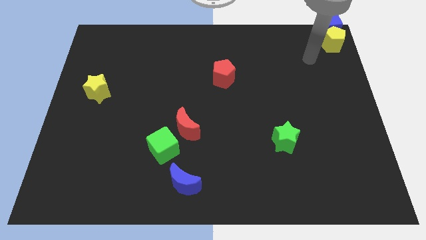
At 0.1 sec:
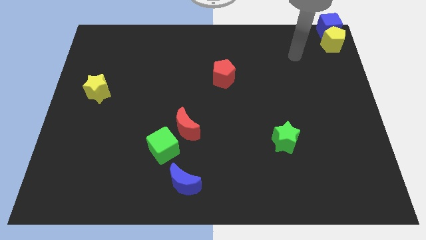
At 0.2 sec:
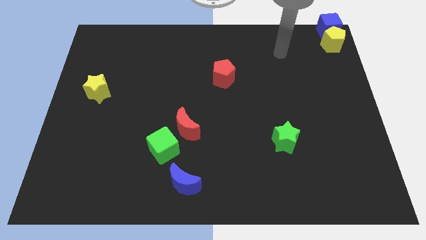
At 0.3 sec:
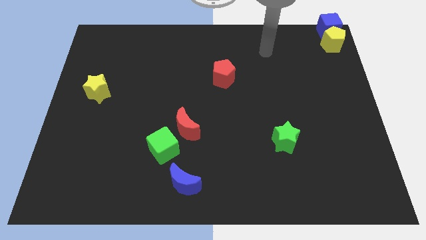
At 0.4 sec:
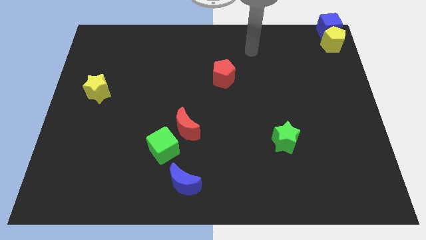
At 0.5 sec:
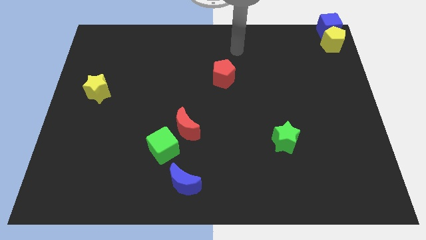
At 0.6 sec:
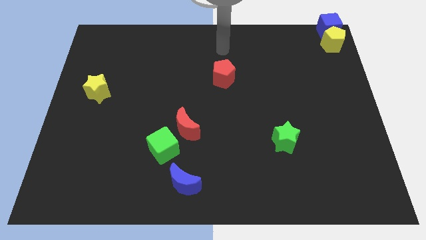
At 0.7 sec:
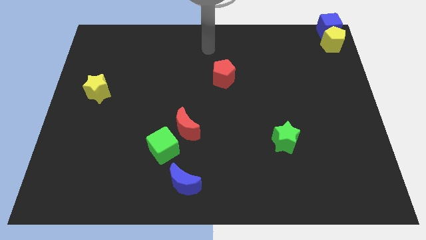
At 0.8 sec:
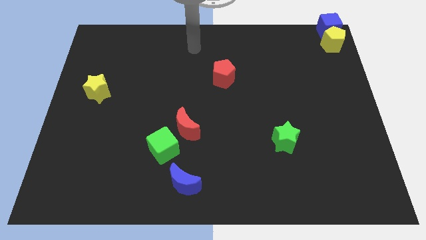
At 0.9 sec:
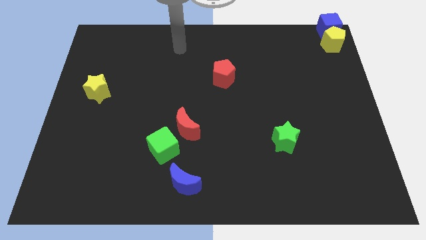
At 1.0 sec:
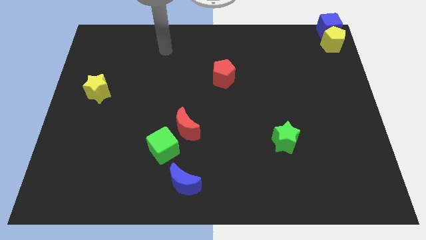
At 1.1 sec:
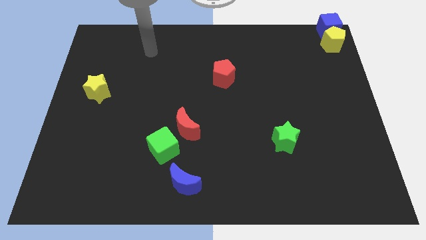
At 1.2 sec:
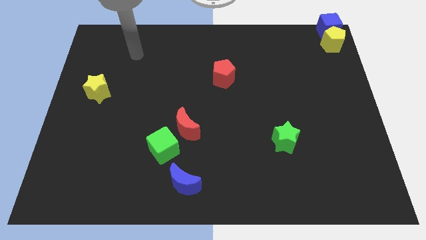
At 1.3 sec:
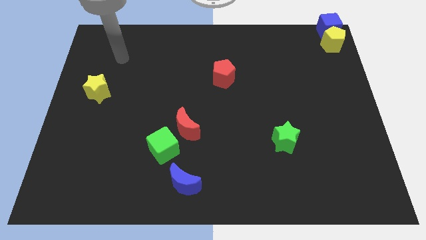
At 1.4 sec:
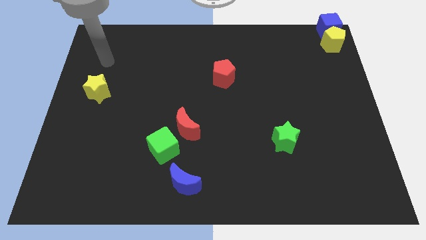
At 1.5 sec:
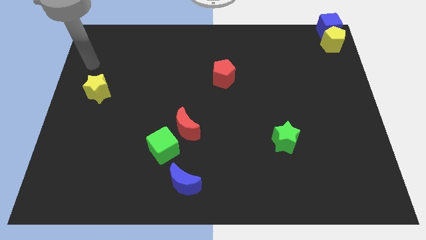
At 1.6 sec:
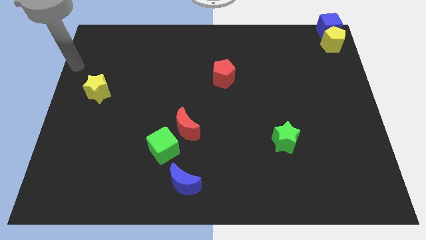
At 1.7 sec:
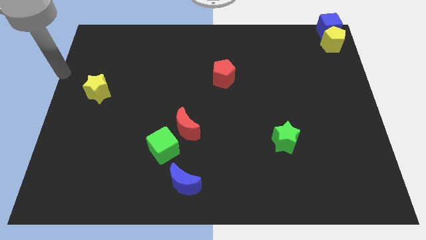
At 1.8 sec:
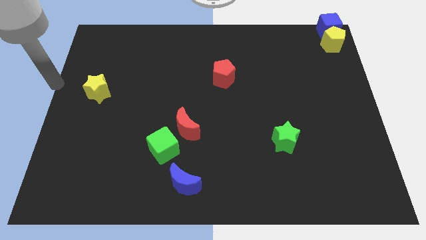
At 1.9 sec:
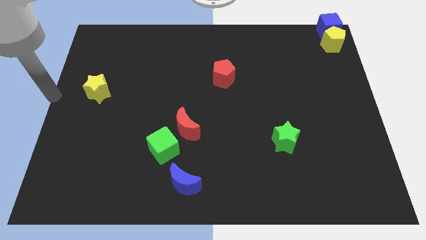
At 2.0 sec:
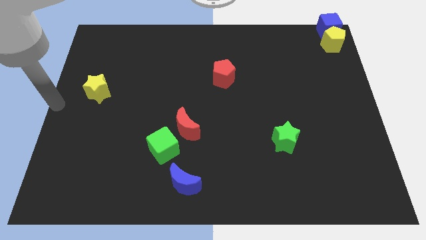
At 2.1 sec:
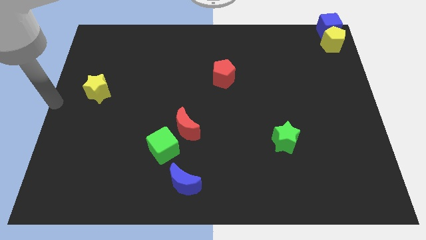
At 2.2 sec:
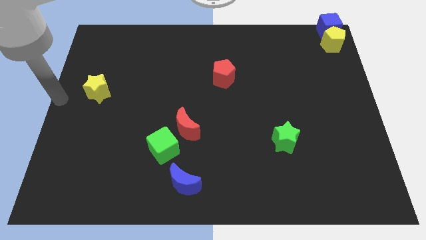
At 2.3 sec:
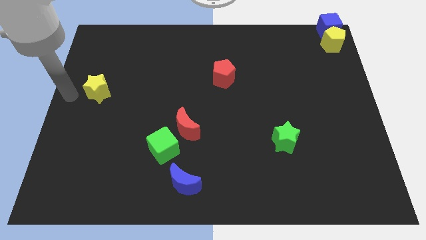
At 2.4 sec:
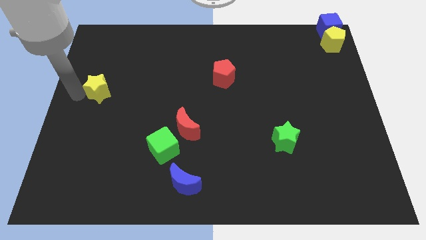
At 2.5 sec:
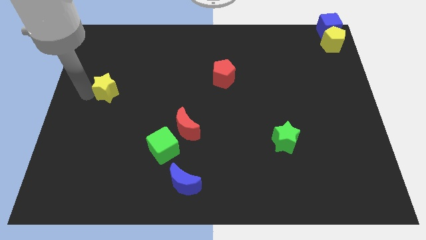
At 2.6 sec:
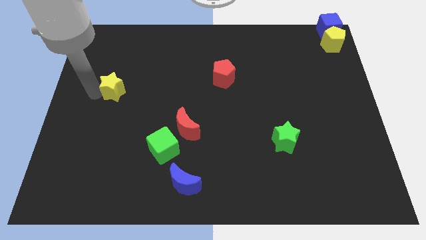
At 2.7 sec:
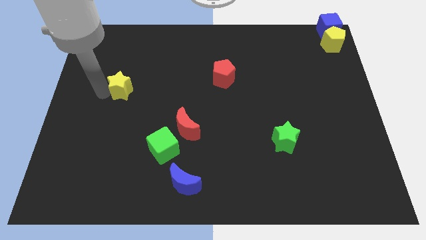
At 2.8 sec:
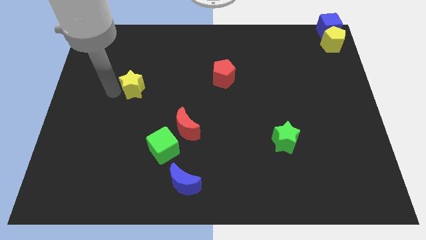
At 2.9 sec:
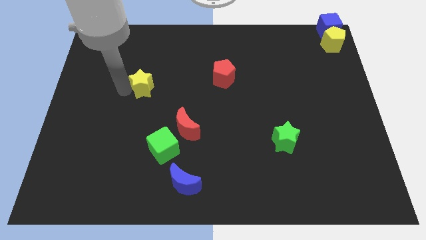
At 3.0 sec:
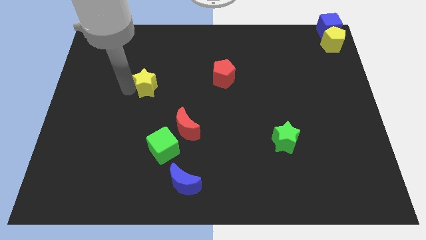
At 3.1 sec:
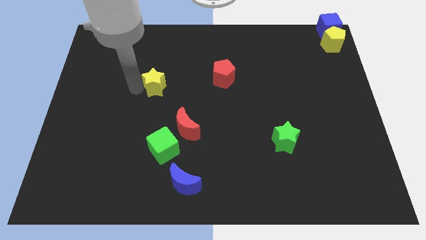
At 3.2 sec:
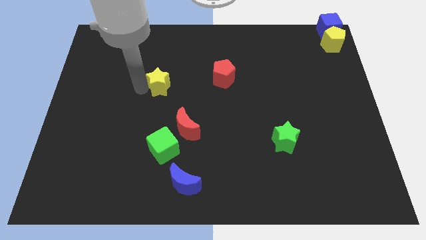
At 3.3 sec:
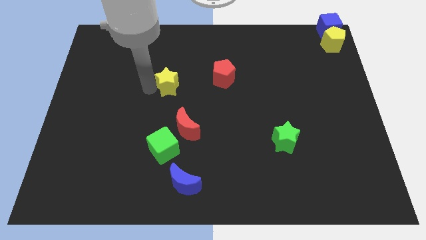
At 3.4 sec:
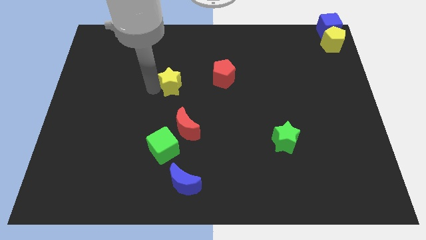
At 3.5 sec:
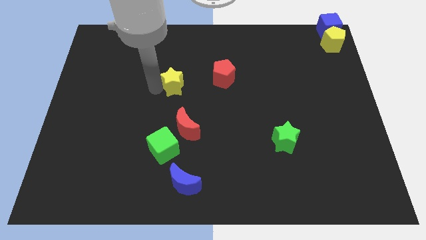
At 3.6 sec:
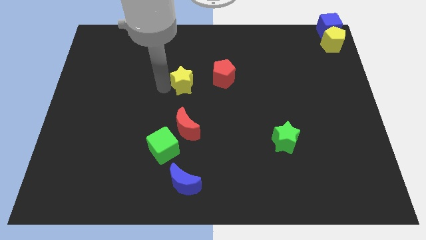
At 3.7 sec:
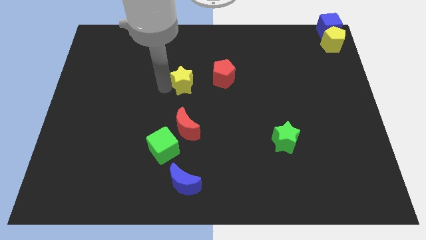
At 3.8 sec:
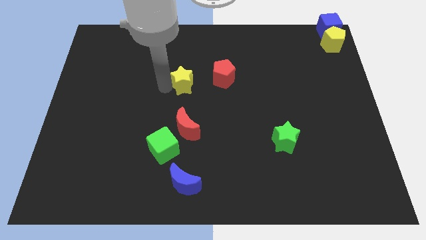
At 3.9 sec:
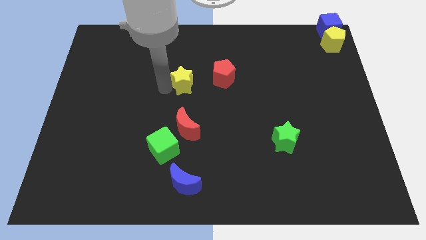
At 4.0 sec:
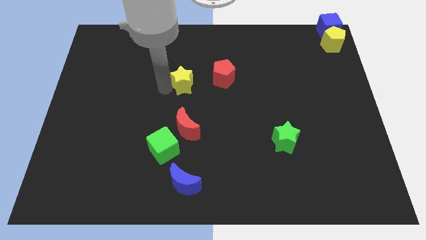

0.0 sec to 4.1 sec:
place the yellow star to the left of the red pentagon

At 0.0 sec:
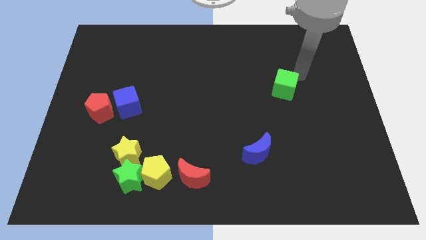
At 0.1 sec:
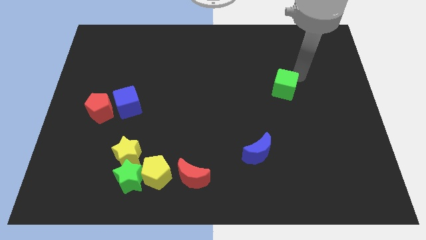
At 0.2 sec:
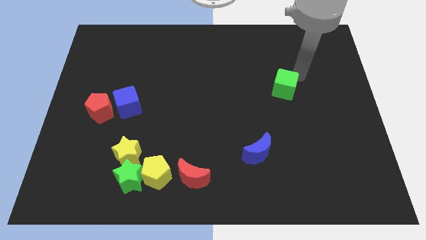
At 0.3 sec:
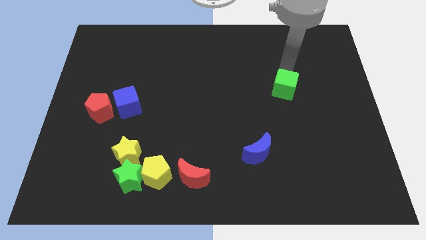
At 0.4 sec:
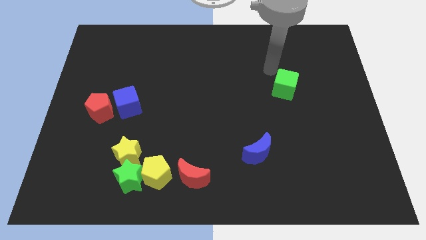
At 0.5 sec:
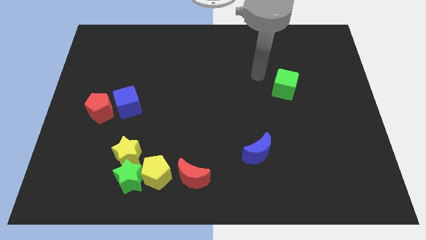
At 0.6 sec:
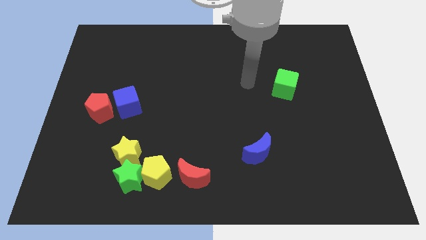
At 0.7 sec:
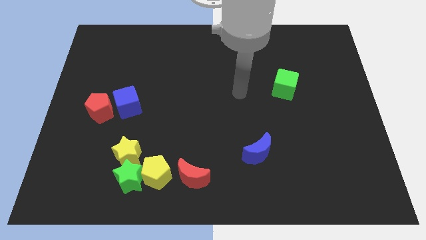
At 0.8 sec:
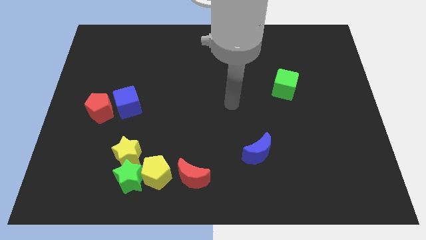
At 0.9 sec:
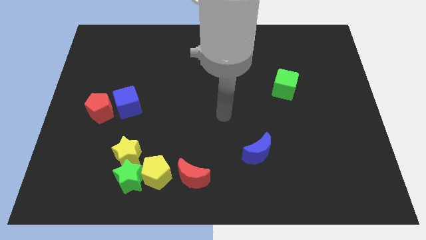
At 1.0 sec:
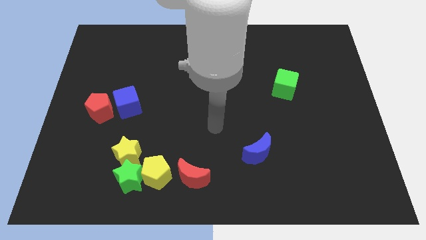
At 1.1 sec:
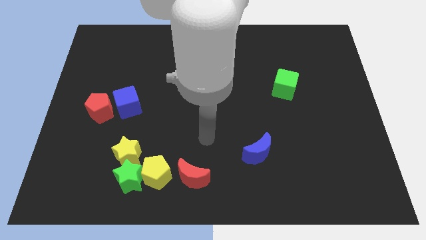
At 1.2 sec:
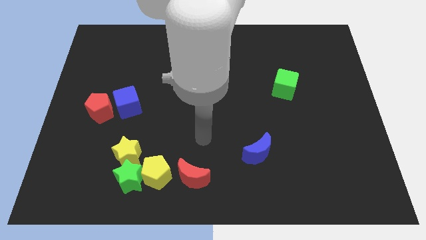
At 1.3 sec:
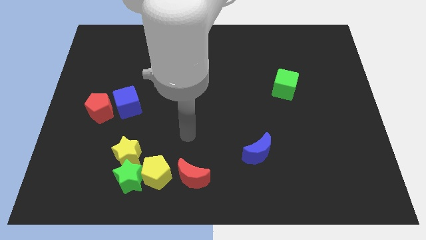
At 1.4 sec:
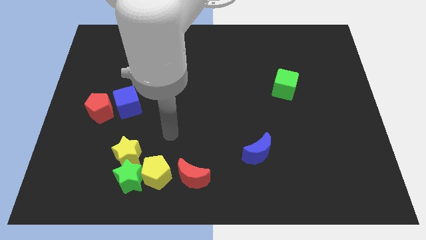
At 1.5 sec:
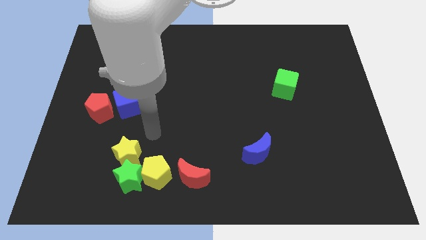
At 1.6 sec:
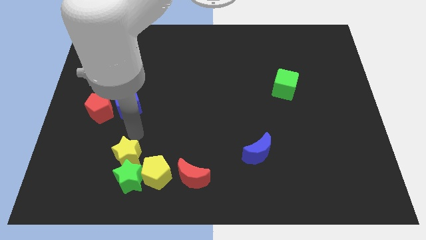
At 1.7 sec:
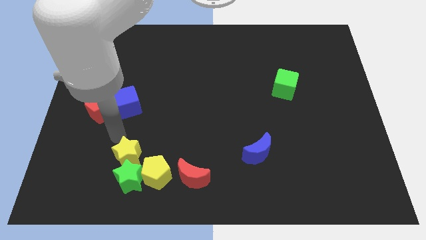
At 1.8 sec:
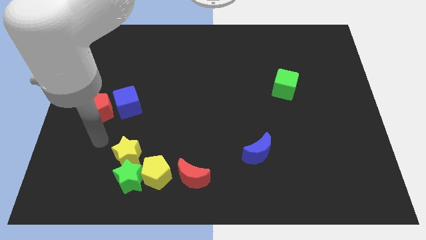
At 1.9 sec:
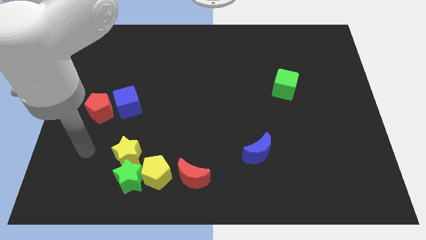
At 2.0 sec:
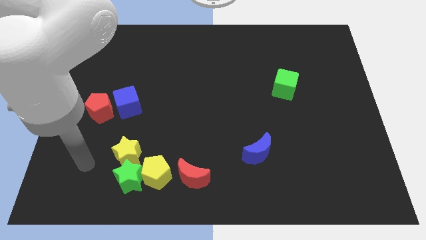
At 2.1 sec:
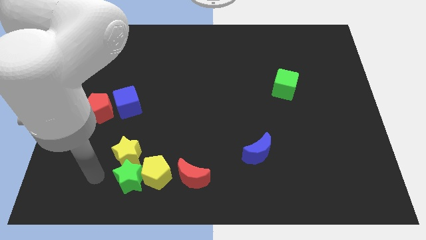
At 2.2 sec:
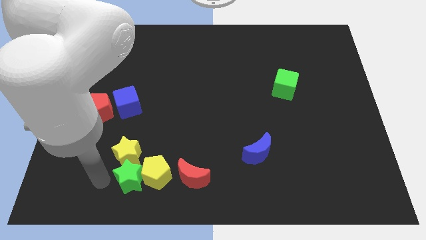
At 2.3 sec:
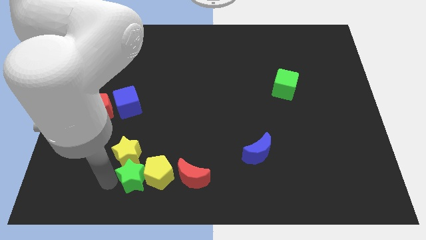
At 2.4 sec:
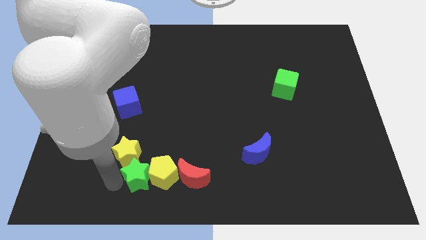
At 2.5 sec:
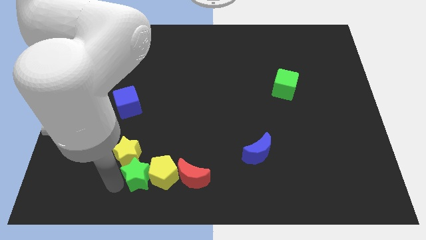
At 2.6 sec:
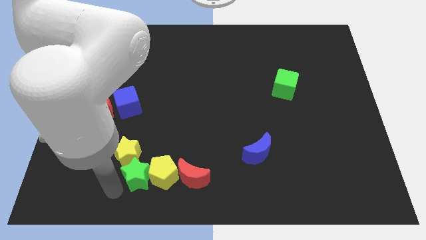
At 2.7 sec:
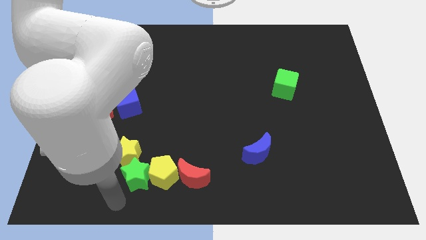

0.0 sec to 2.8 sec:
push the green star and yellow pentagon into the red moon

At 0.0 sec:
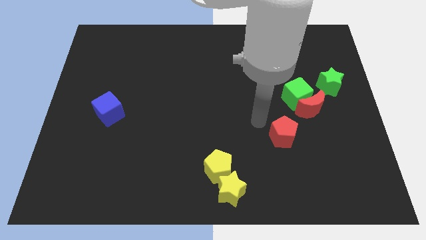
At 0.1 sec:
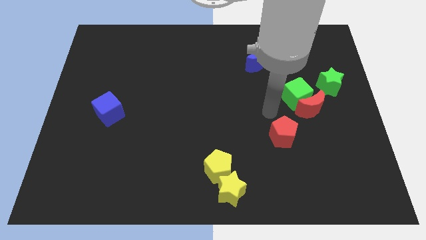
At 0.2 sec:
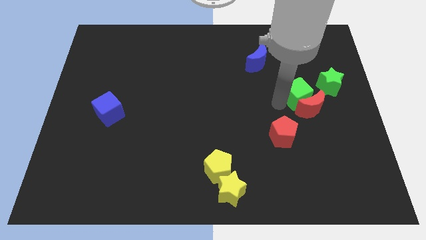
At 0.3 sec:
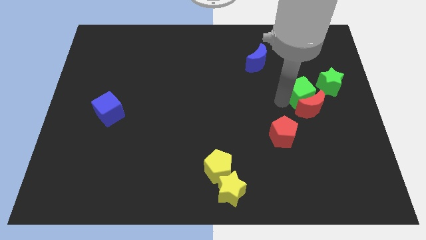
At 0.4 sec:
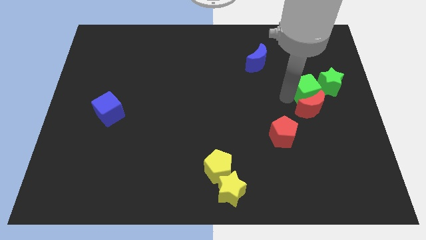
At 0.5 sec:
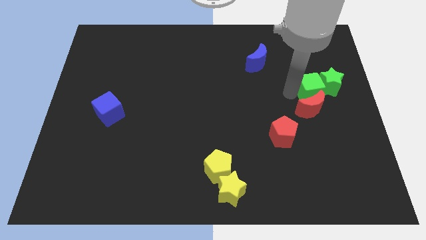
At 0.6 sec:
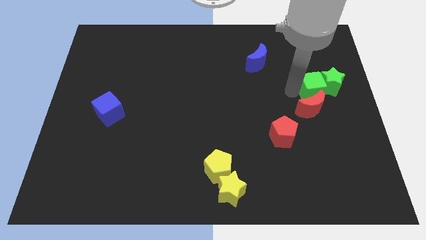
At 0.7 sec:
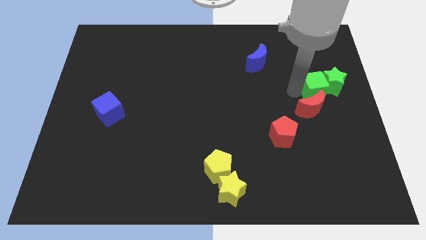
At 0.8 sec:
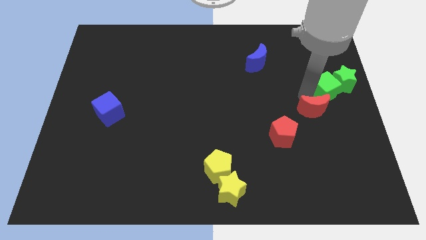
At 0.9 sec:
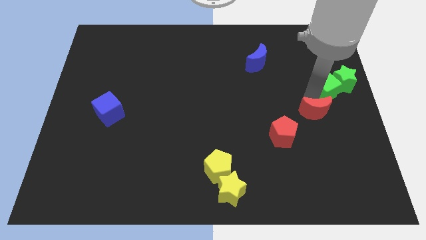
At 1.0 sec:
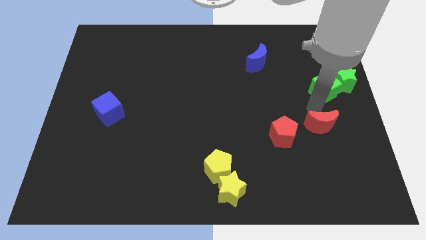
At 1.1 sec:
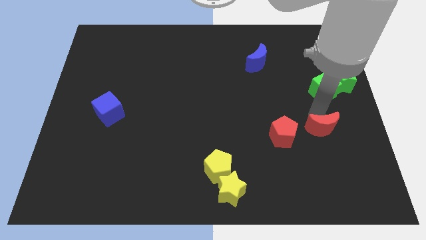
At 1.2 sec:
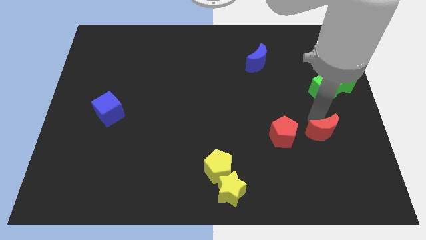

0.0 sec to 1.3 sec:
push the green cube into the green star

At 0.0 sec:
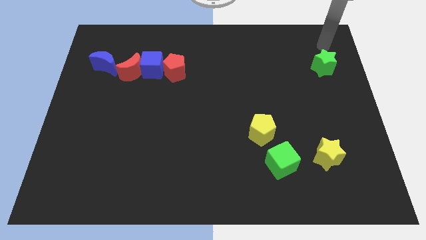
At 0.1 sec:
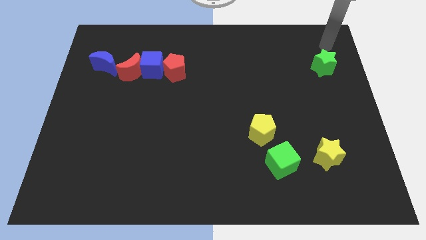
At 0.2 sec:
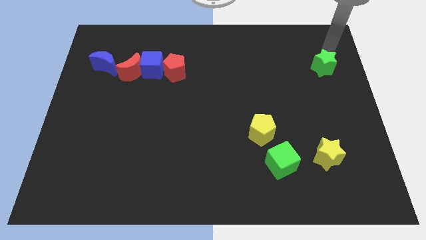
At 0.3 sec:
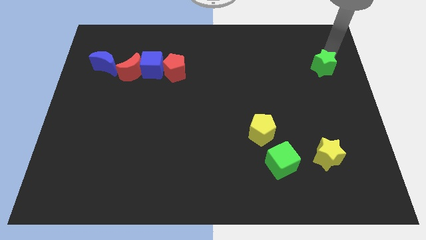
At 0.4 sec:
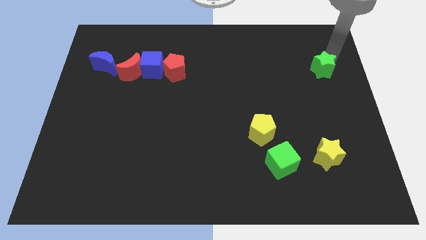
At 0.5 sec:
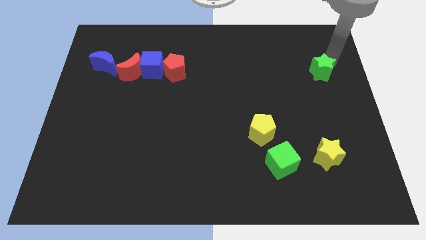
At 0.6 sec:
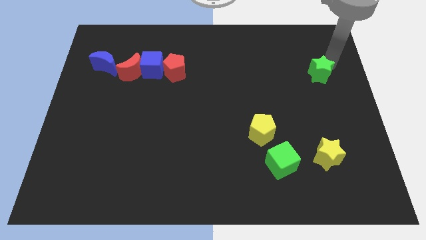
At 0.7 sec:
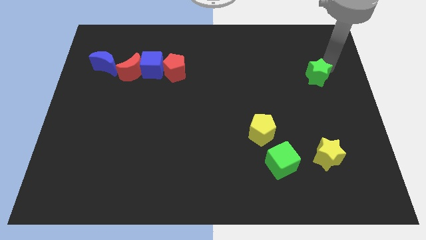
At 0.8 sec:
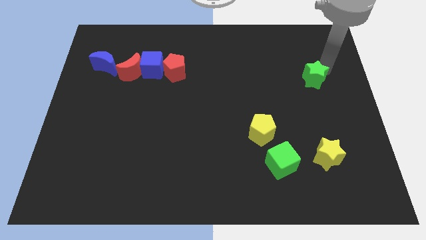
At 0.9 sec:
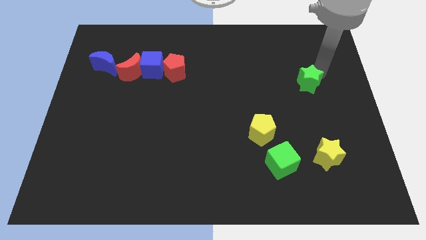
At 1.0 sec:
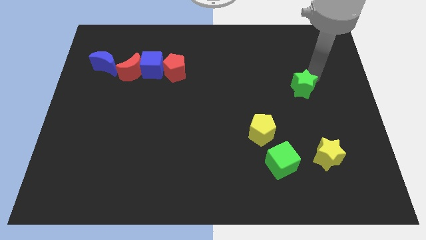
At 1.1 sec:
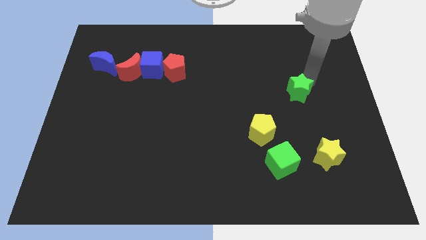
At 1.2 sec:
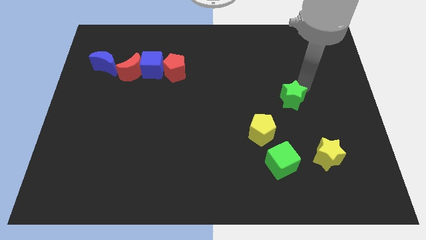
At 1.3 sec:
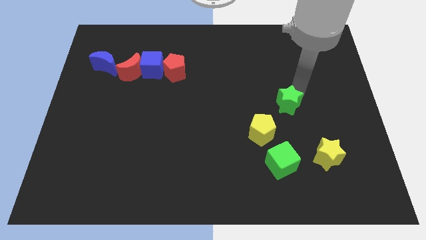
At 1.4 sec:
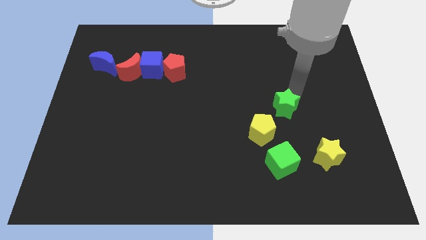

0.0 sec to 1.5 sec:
slide the green star vertically above the green cube
